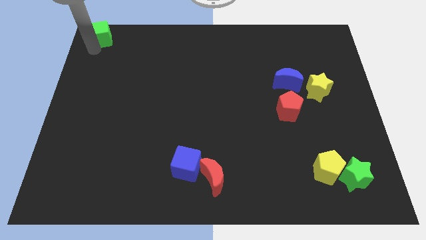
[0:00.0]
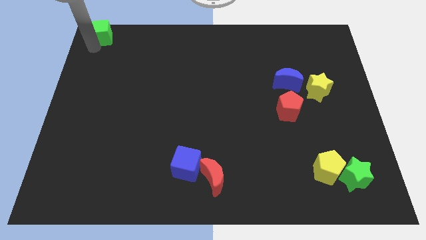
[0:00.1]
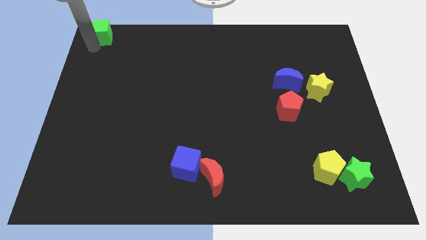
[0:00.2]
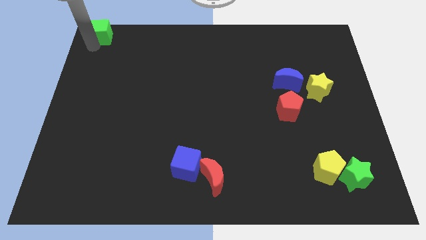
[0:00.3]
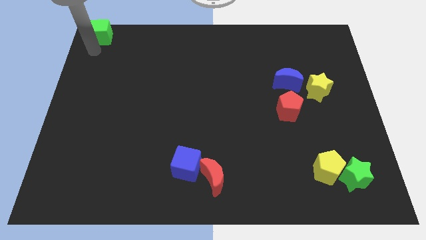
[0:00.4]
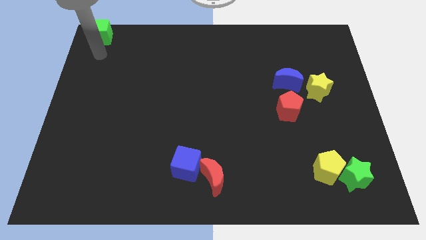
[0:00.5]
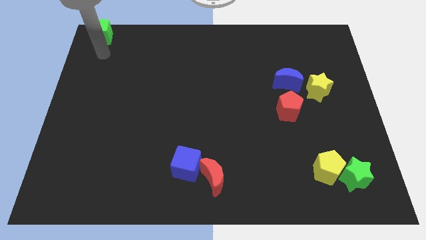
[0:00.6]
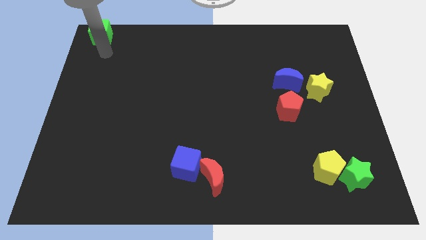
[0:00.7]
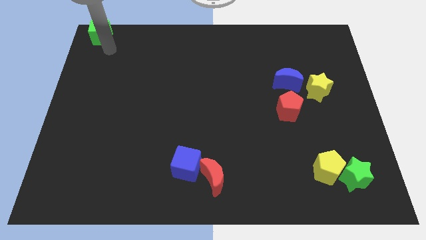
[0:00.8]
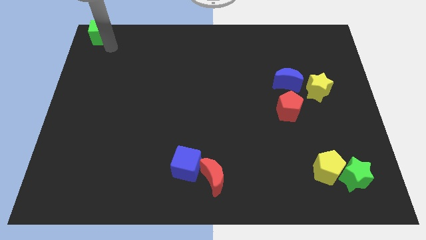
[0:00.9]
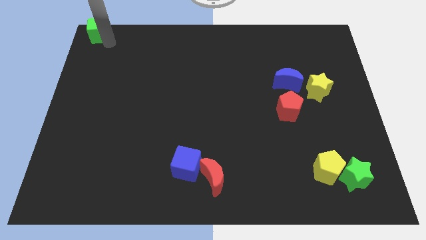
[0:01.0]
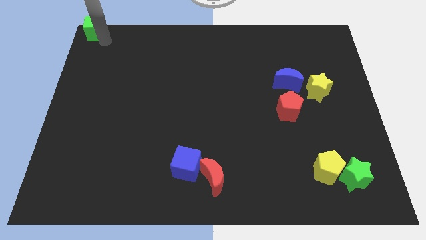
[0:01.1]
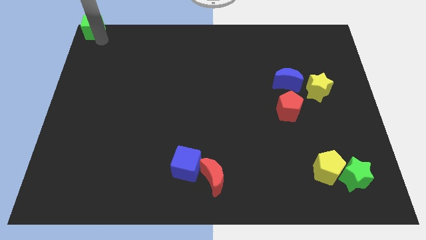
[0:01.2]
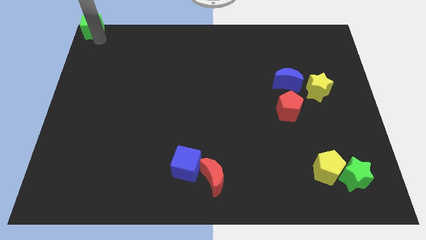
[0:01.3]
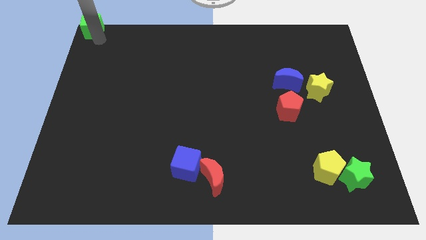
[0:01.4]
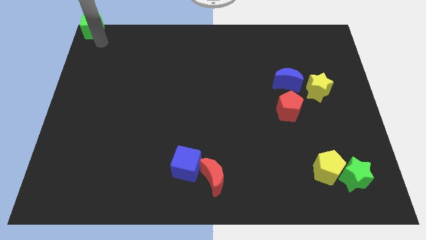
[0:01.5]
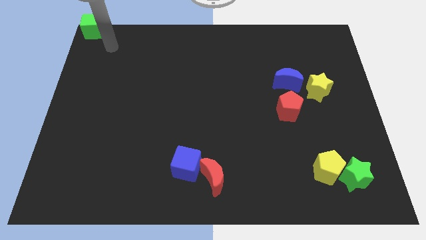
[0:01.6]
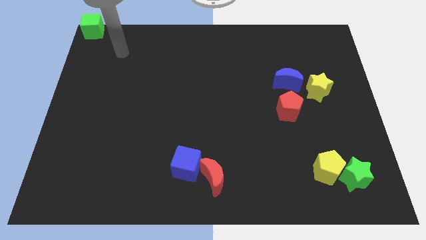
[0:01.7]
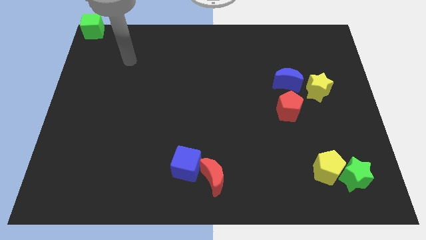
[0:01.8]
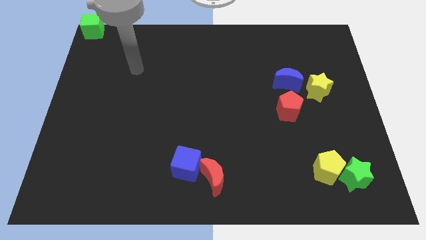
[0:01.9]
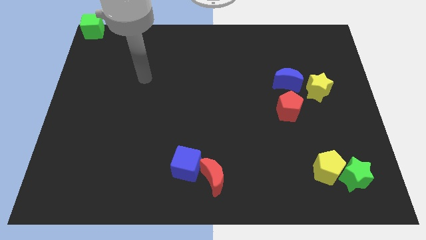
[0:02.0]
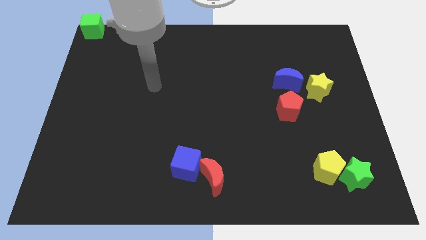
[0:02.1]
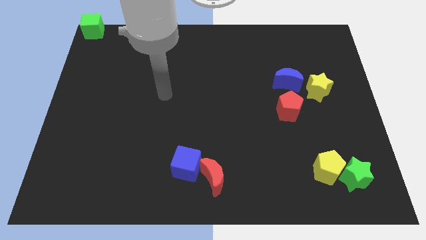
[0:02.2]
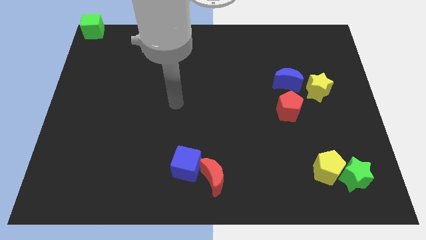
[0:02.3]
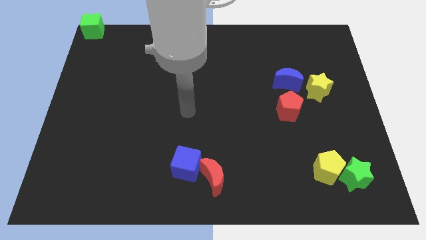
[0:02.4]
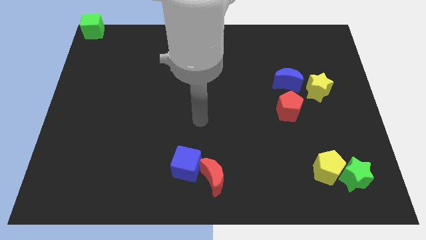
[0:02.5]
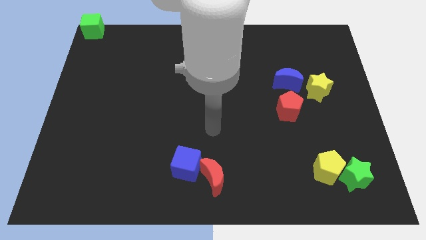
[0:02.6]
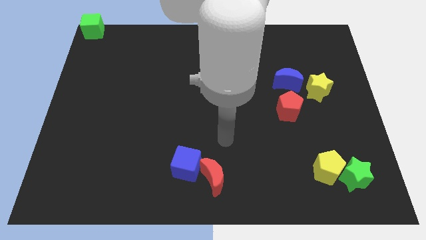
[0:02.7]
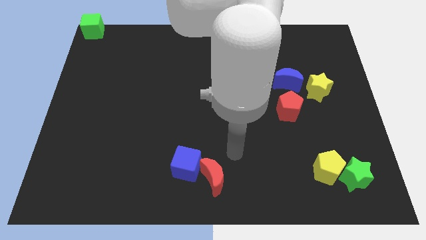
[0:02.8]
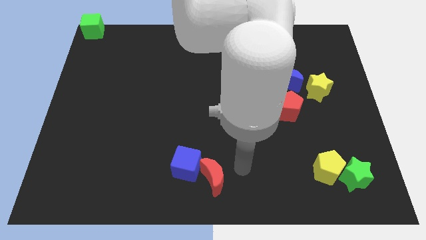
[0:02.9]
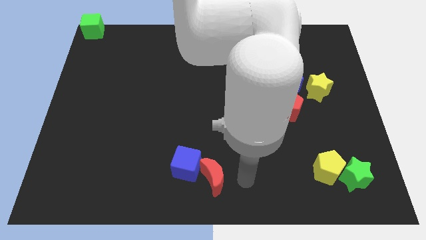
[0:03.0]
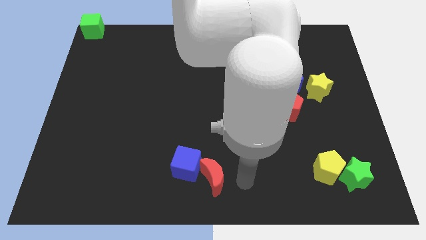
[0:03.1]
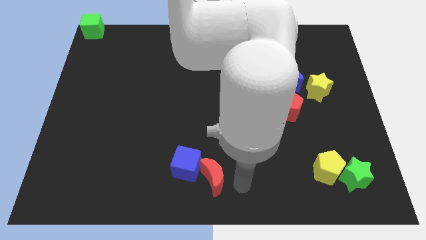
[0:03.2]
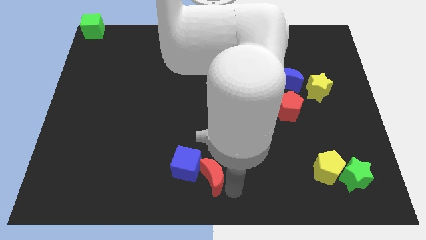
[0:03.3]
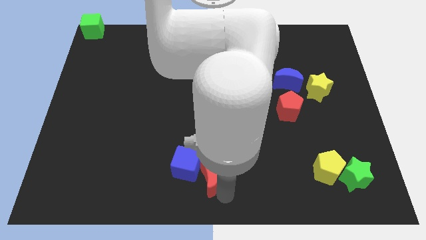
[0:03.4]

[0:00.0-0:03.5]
move your arm away from the green cube

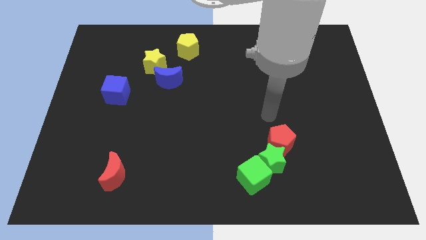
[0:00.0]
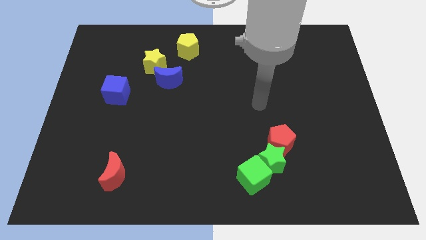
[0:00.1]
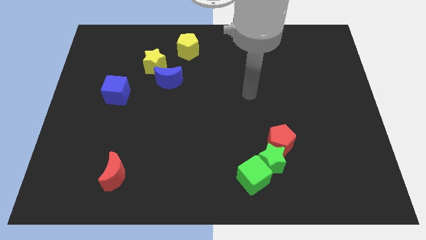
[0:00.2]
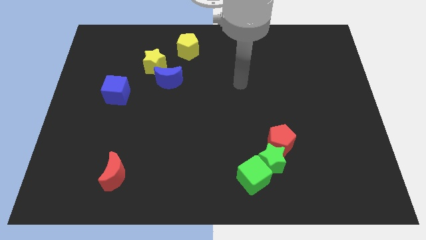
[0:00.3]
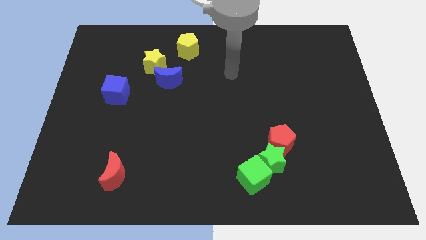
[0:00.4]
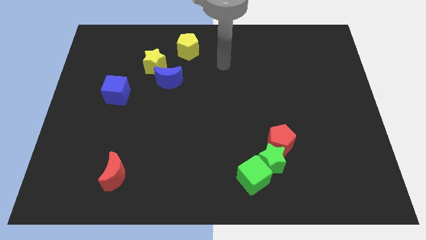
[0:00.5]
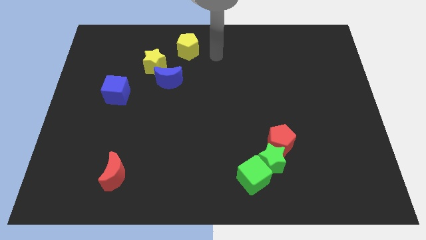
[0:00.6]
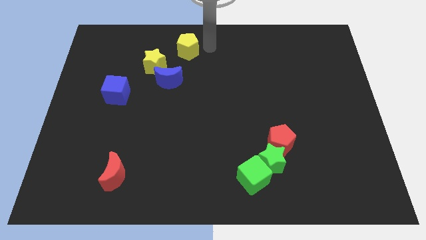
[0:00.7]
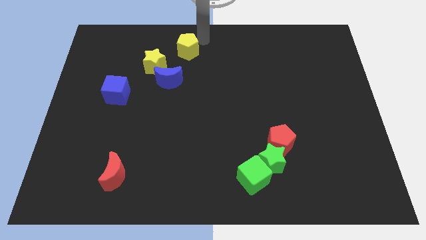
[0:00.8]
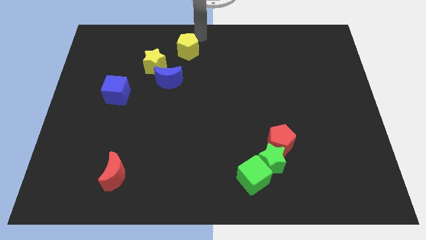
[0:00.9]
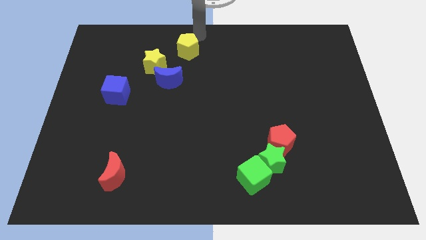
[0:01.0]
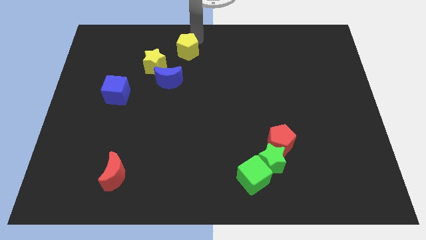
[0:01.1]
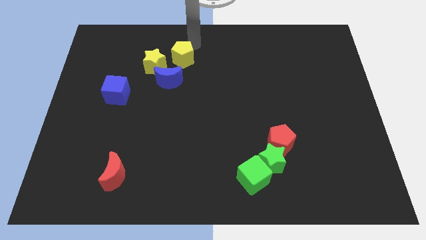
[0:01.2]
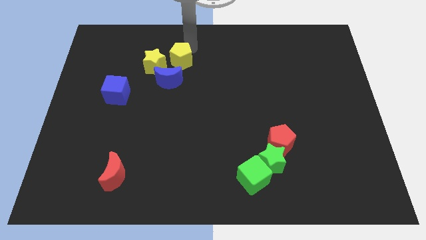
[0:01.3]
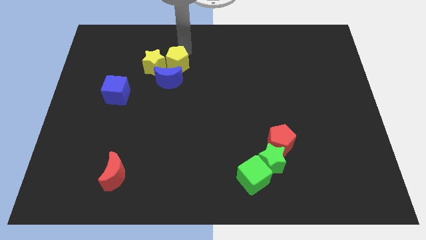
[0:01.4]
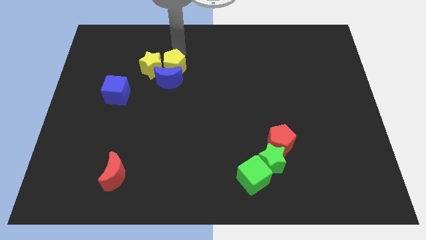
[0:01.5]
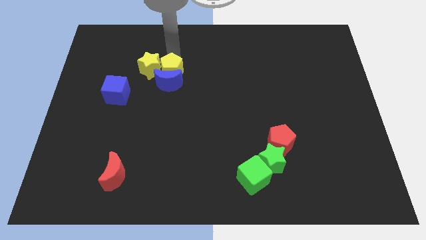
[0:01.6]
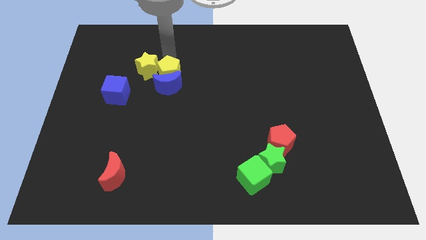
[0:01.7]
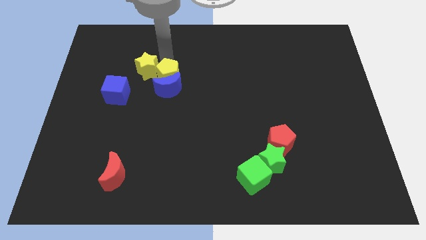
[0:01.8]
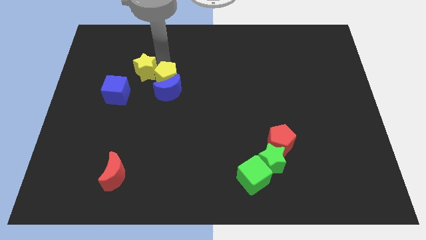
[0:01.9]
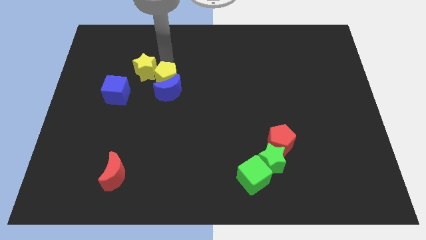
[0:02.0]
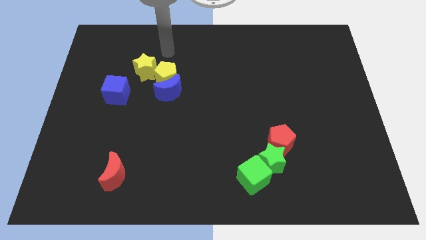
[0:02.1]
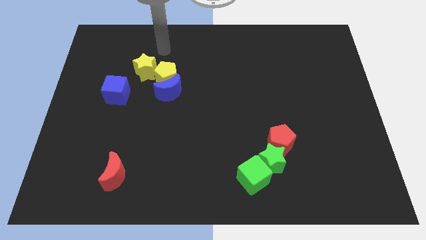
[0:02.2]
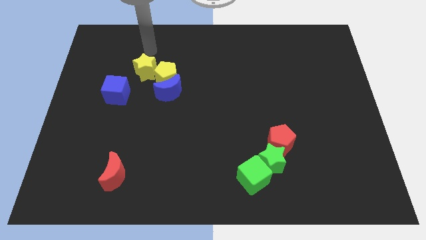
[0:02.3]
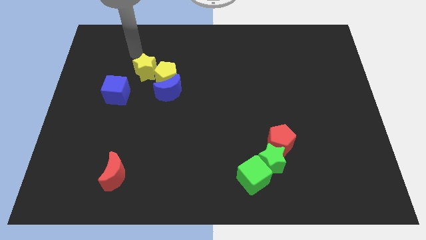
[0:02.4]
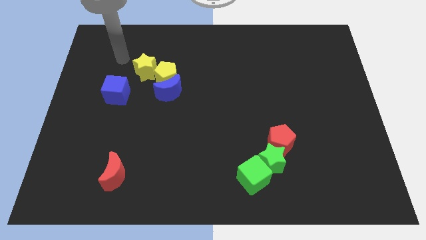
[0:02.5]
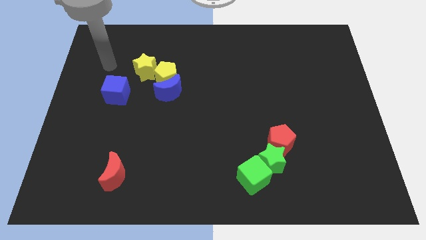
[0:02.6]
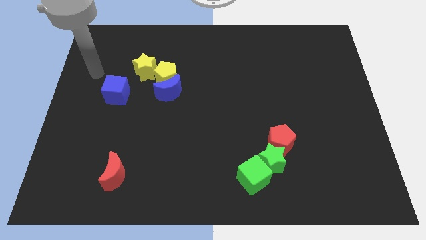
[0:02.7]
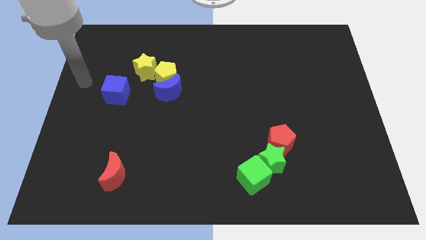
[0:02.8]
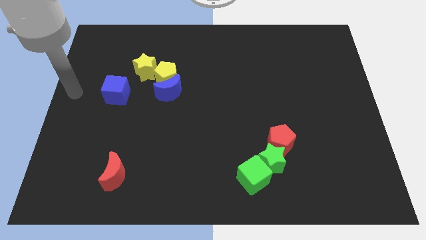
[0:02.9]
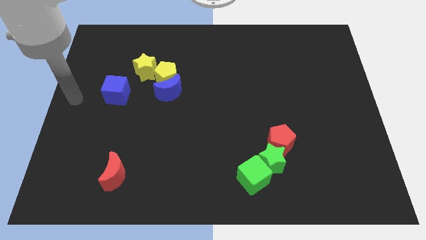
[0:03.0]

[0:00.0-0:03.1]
group up the yellow blocks with the blue crescent

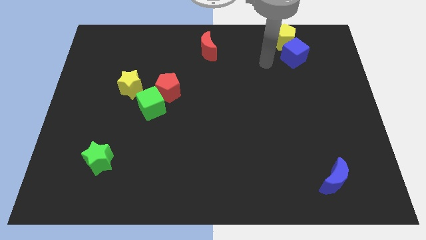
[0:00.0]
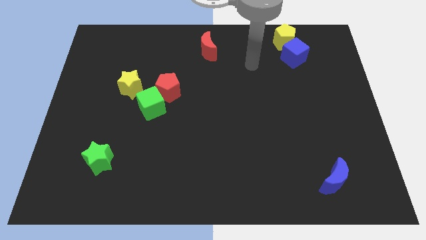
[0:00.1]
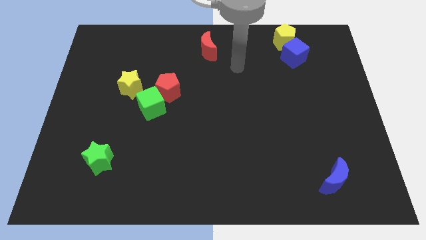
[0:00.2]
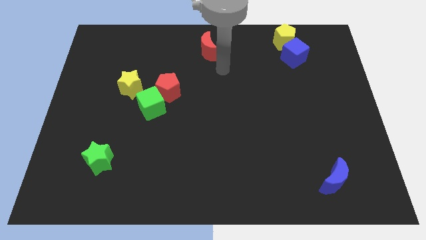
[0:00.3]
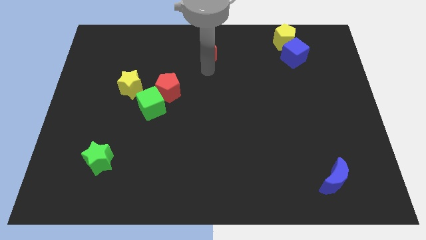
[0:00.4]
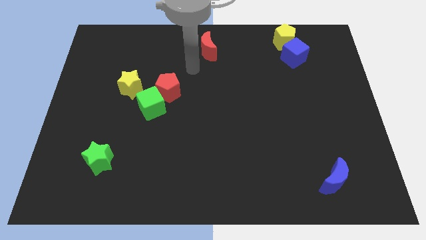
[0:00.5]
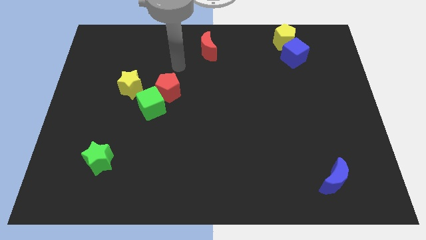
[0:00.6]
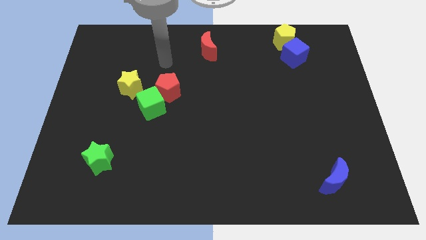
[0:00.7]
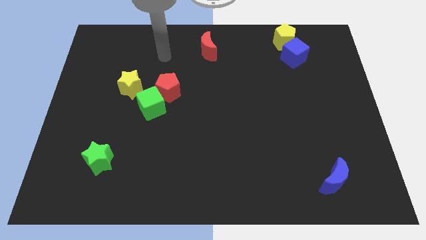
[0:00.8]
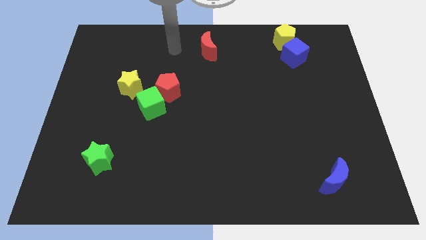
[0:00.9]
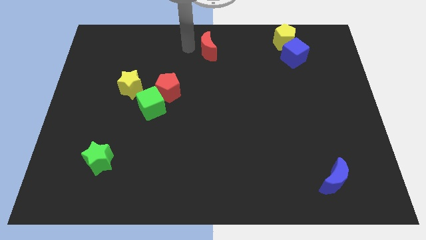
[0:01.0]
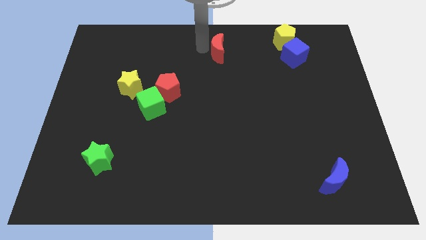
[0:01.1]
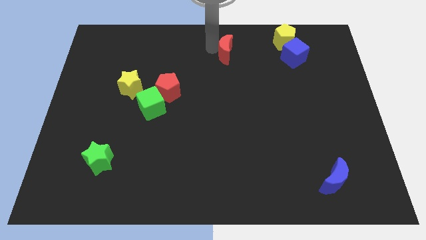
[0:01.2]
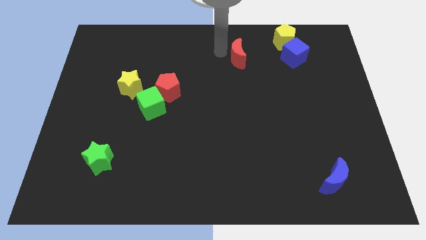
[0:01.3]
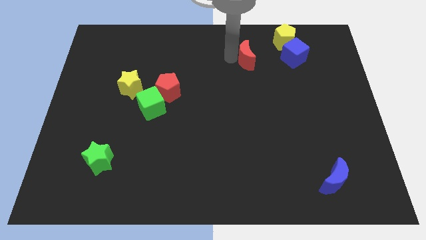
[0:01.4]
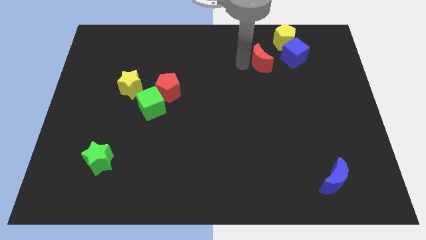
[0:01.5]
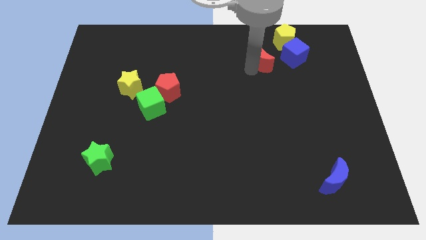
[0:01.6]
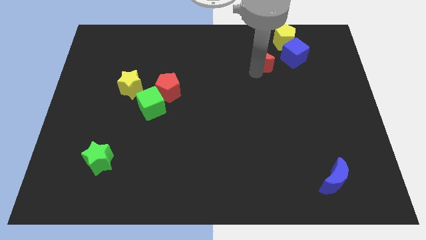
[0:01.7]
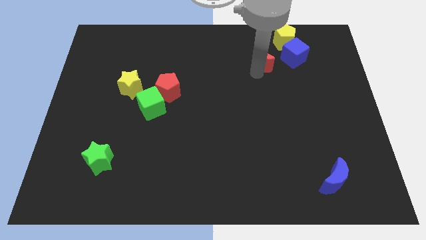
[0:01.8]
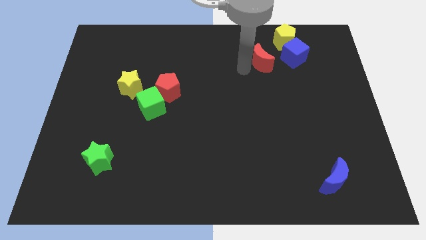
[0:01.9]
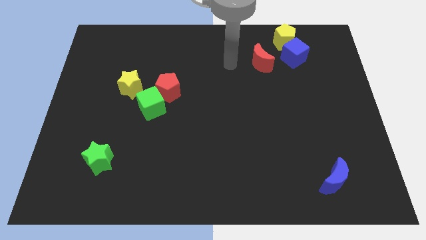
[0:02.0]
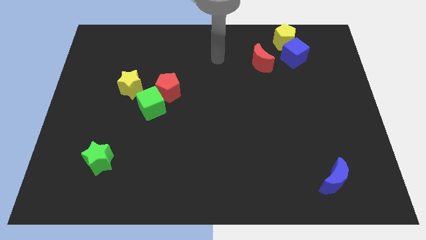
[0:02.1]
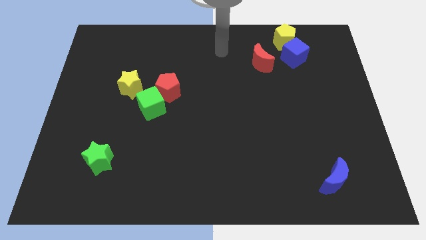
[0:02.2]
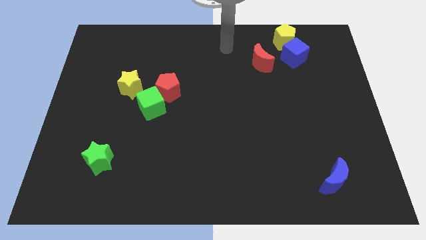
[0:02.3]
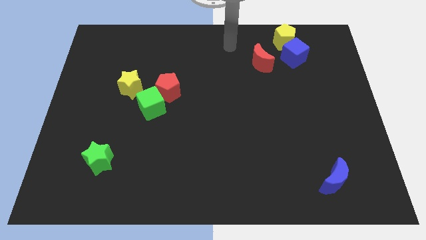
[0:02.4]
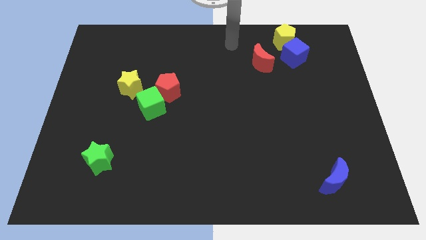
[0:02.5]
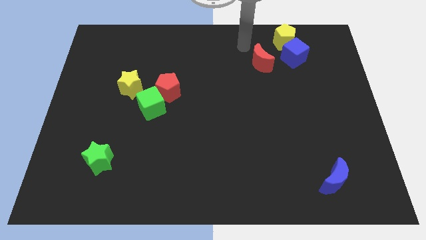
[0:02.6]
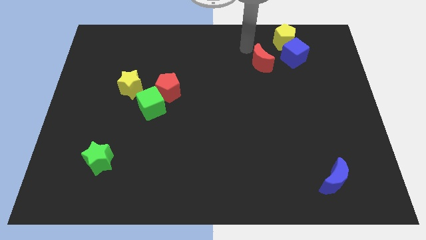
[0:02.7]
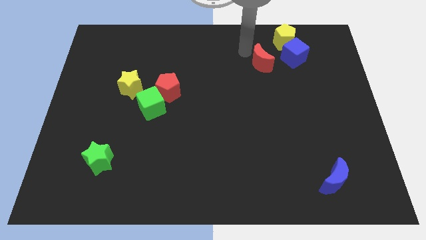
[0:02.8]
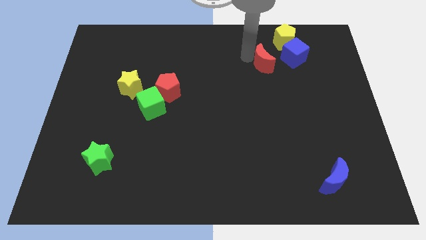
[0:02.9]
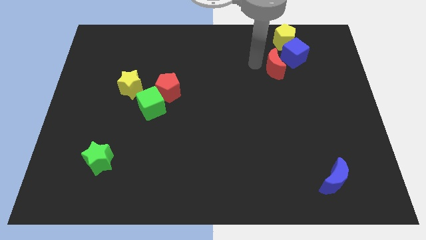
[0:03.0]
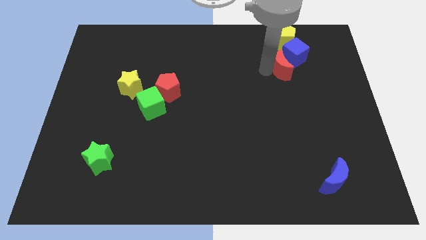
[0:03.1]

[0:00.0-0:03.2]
push the red moon closer to the blue cube
